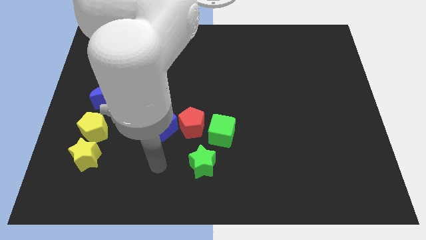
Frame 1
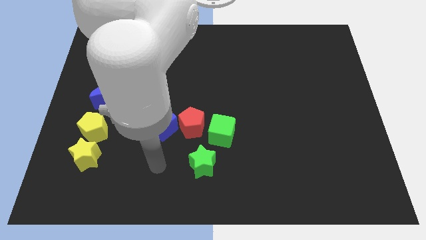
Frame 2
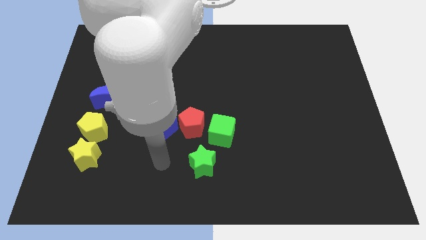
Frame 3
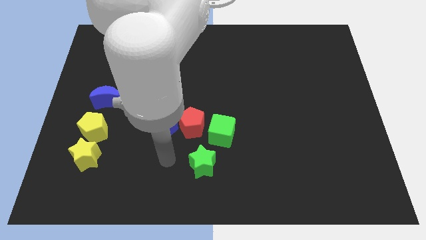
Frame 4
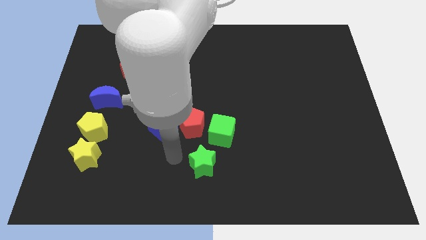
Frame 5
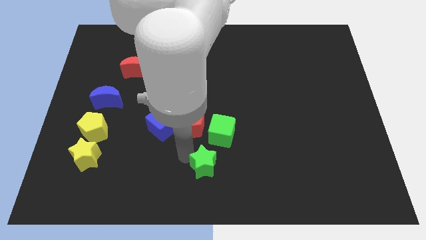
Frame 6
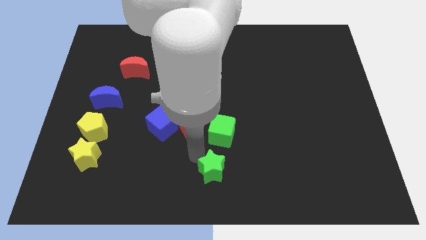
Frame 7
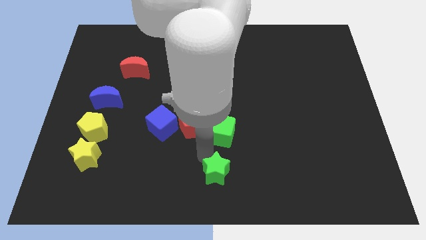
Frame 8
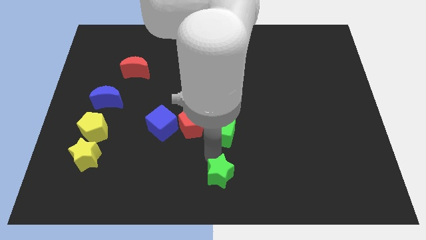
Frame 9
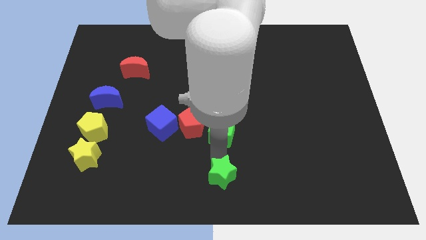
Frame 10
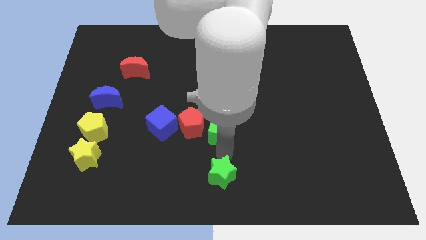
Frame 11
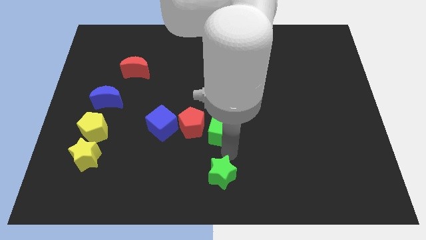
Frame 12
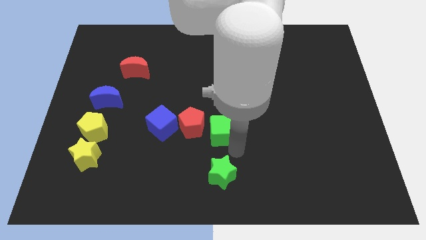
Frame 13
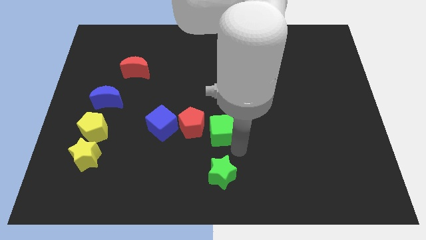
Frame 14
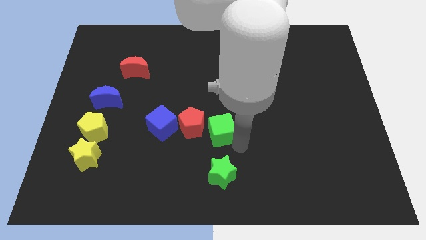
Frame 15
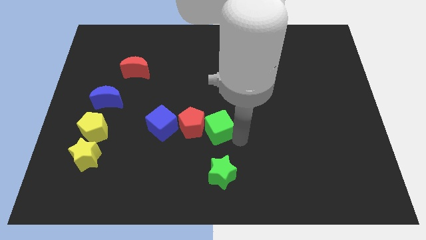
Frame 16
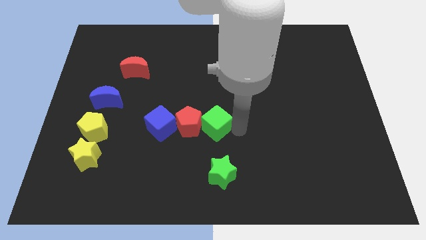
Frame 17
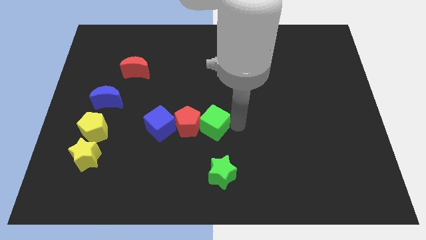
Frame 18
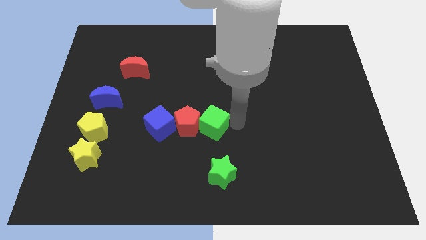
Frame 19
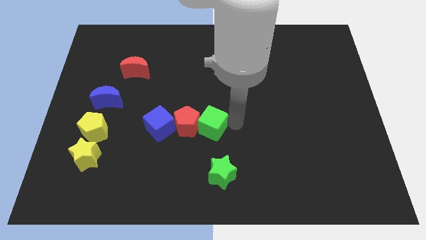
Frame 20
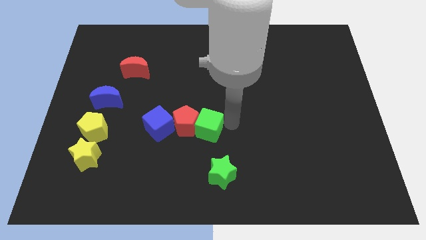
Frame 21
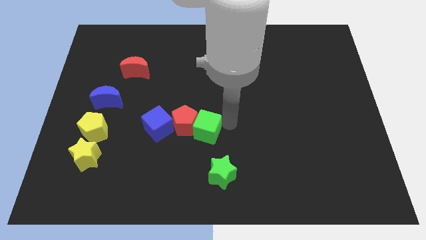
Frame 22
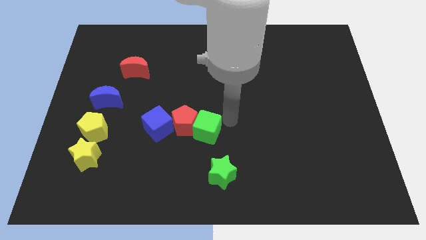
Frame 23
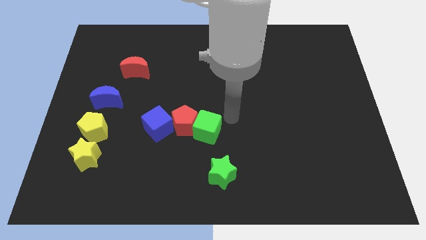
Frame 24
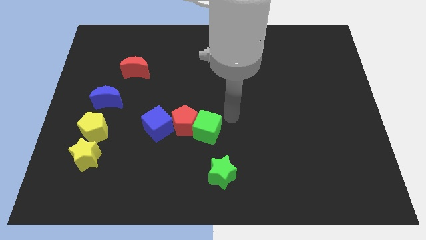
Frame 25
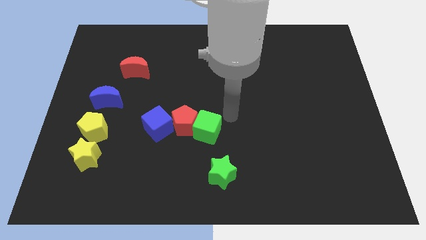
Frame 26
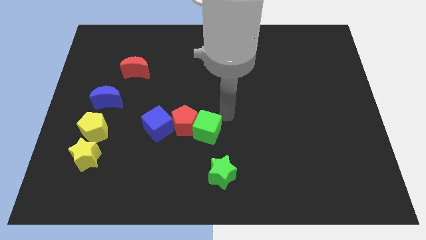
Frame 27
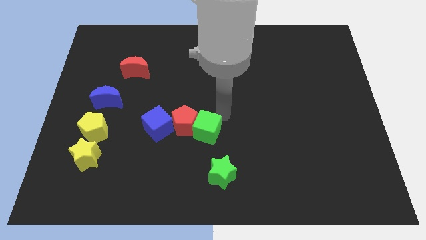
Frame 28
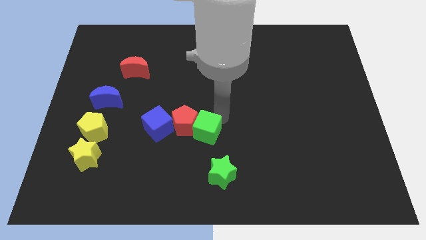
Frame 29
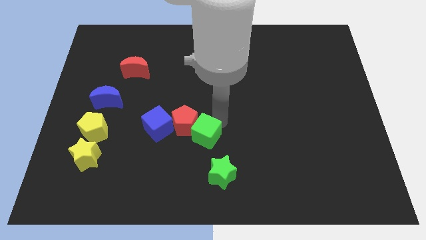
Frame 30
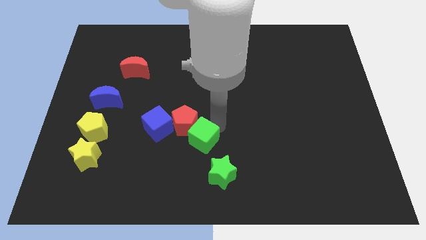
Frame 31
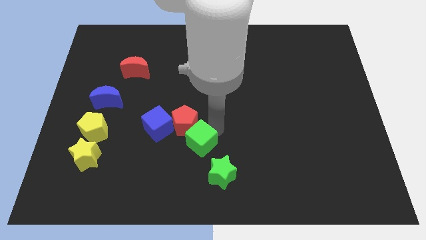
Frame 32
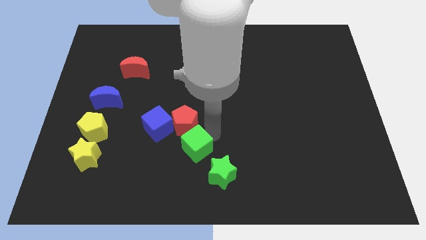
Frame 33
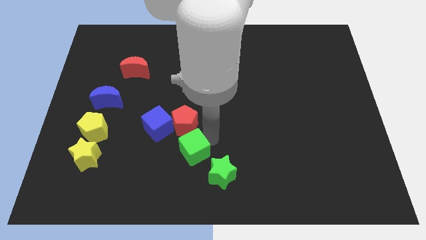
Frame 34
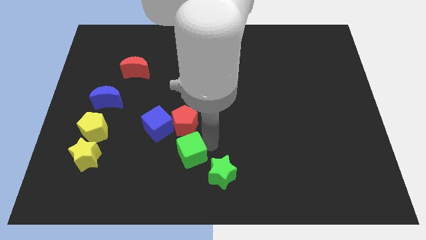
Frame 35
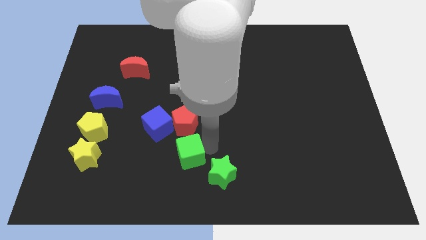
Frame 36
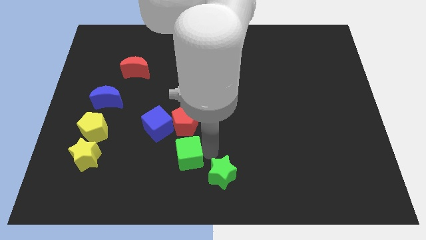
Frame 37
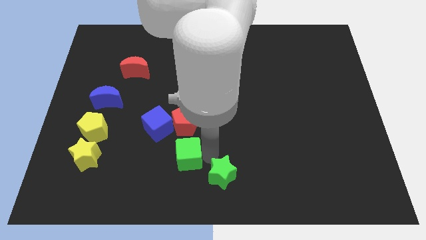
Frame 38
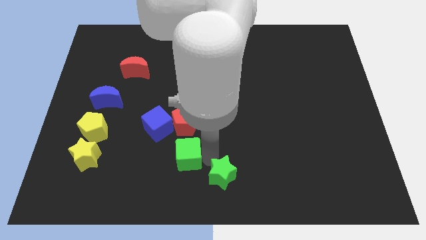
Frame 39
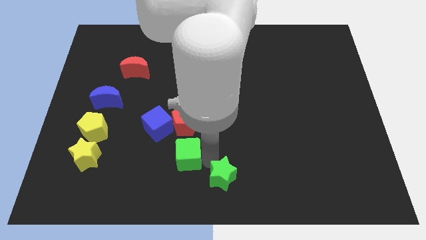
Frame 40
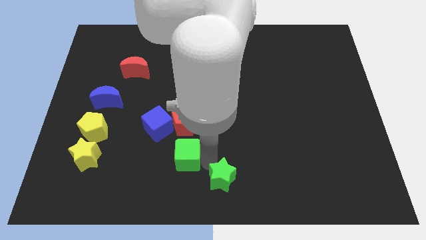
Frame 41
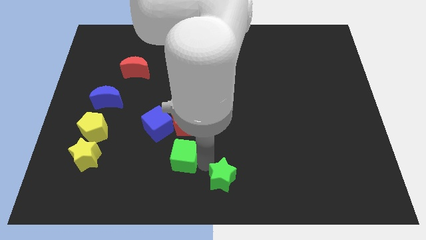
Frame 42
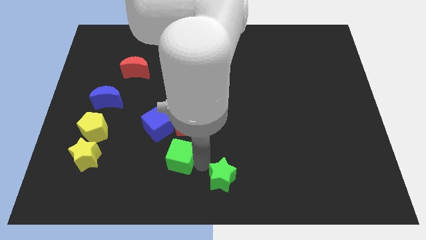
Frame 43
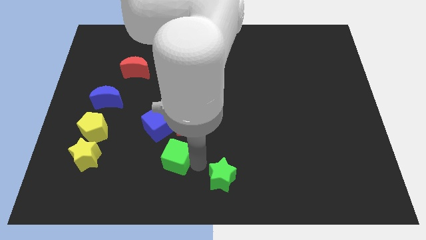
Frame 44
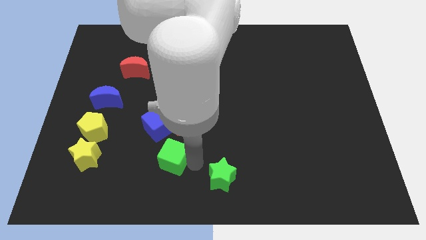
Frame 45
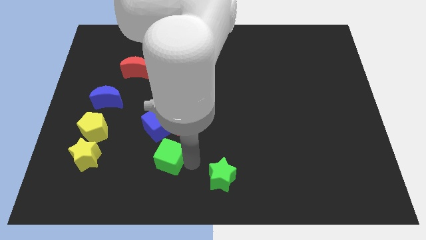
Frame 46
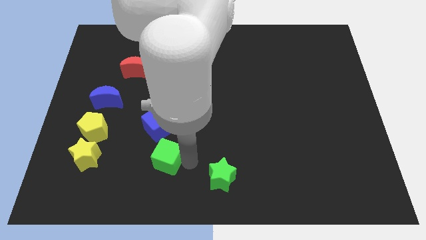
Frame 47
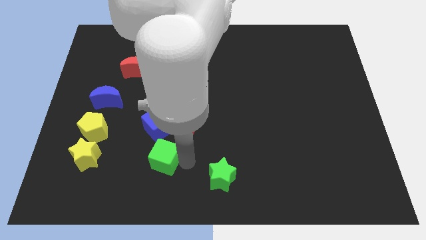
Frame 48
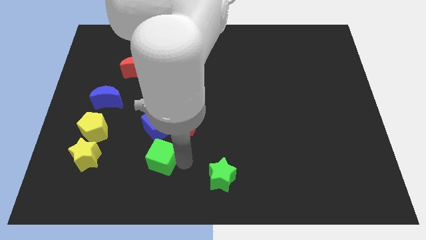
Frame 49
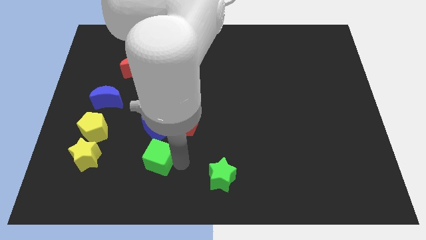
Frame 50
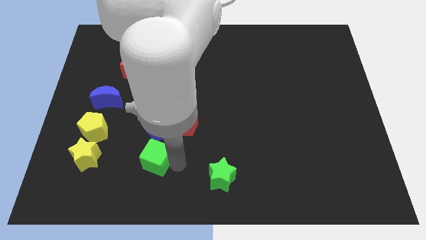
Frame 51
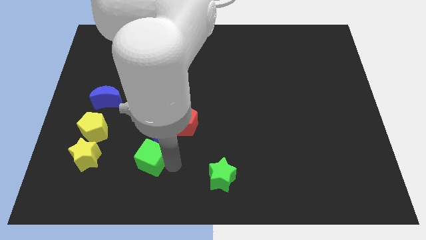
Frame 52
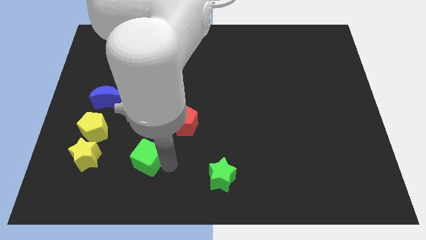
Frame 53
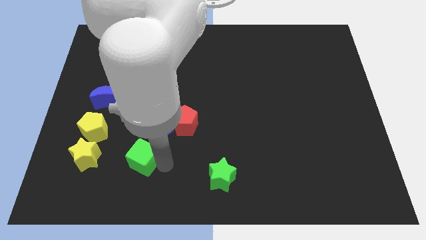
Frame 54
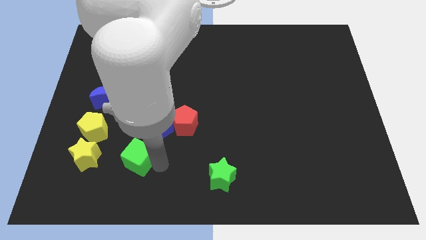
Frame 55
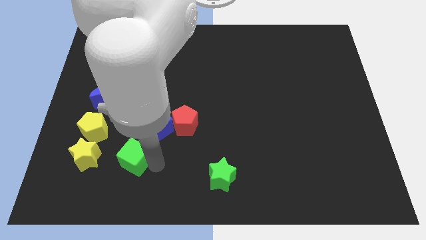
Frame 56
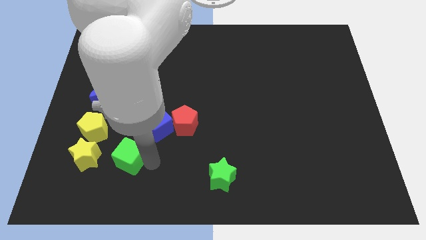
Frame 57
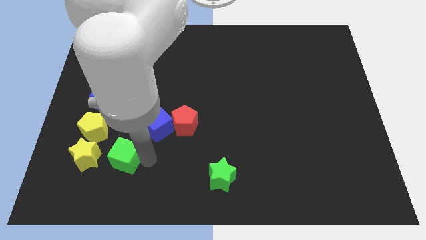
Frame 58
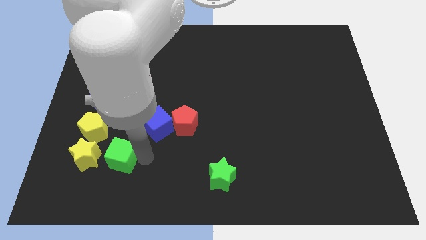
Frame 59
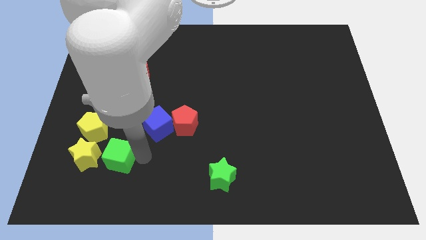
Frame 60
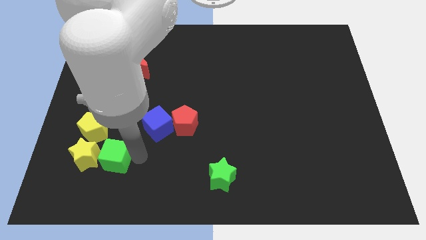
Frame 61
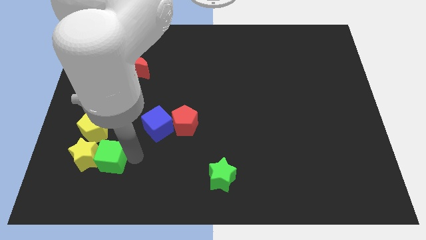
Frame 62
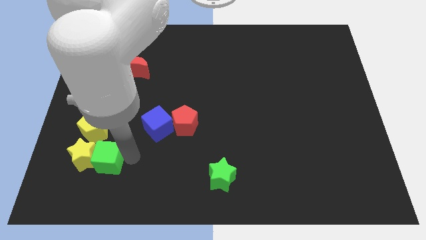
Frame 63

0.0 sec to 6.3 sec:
move the green cube to the yellow star

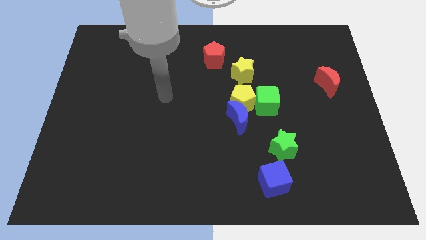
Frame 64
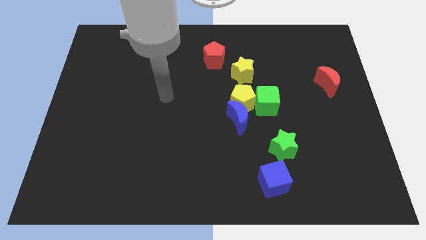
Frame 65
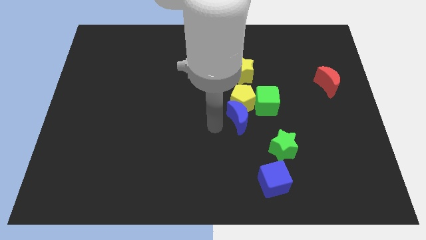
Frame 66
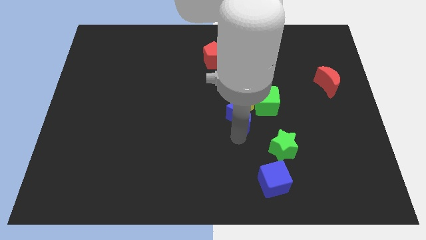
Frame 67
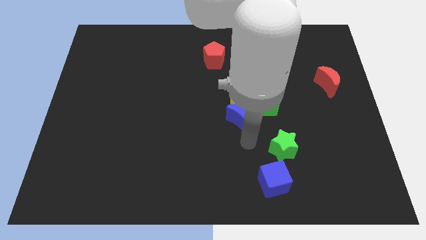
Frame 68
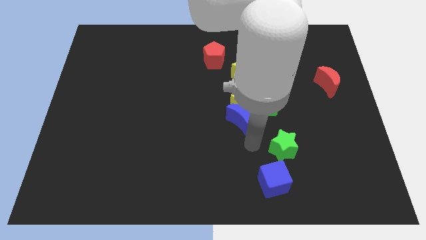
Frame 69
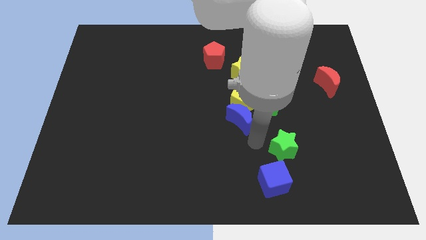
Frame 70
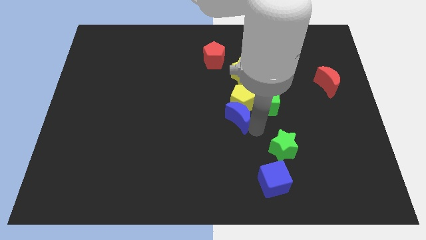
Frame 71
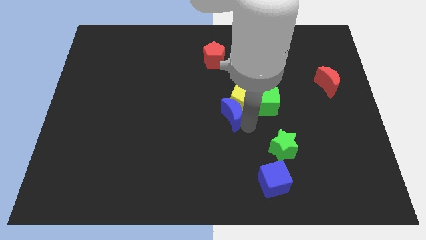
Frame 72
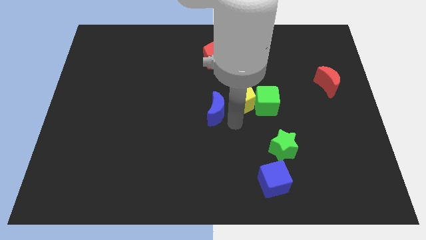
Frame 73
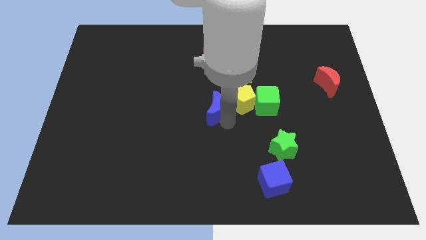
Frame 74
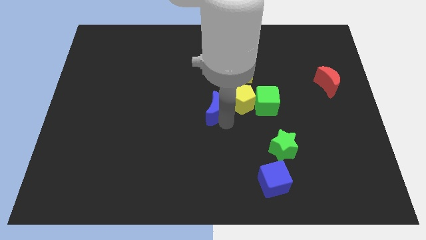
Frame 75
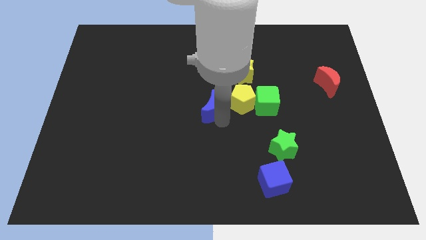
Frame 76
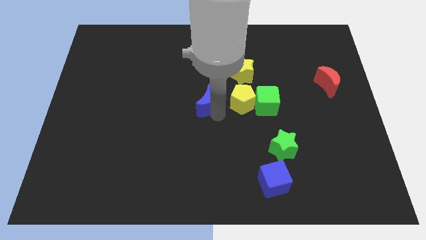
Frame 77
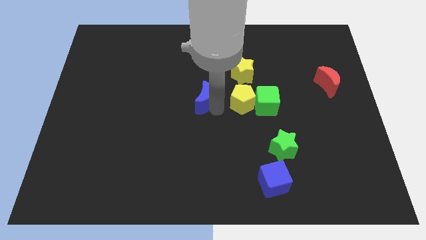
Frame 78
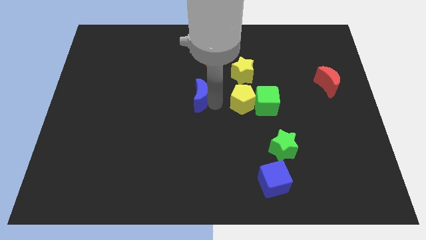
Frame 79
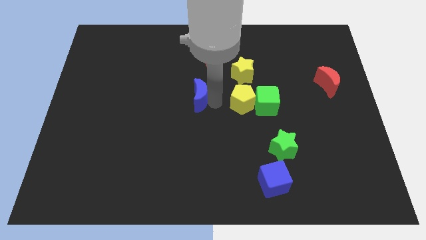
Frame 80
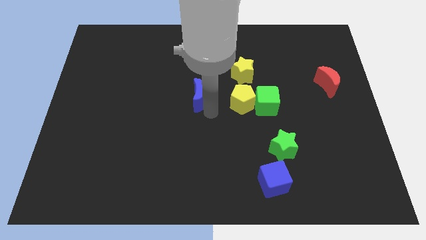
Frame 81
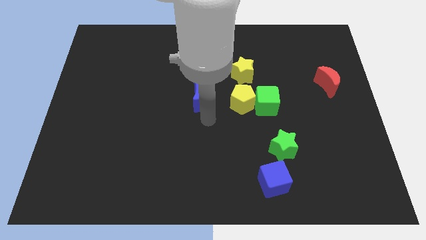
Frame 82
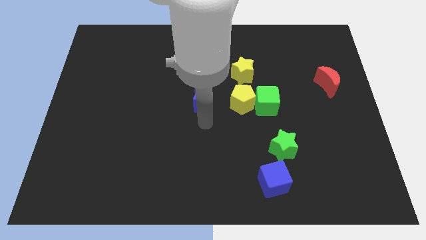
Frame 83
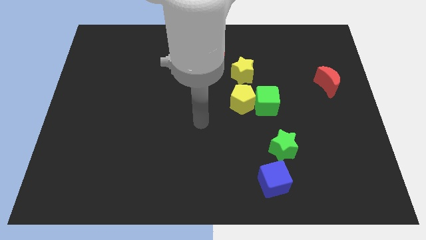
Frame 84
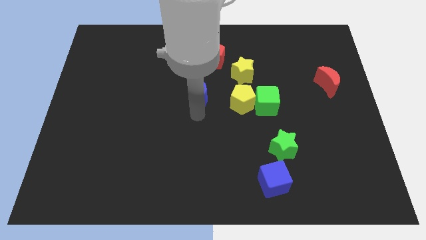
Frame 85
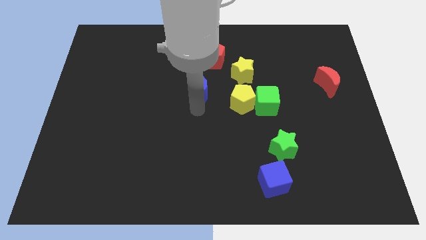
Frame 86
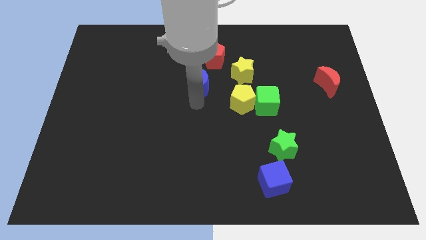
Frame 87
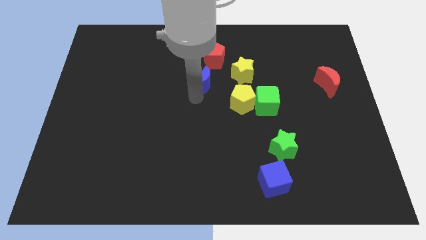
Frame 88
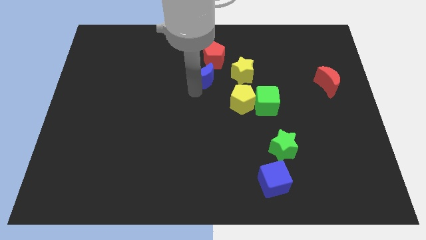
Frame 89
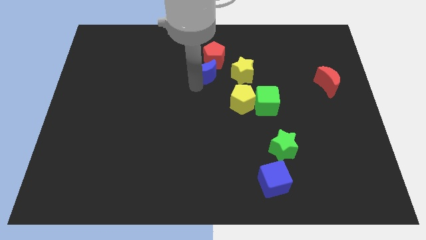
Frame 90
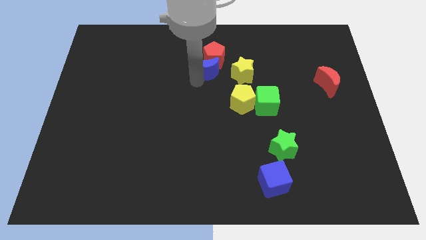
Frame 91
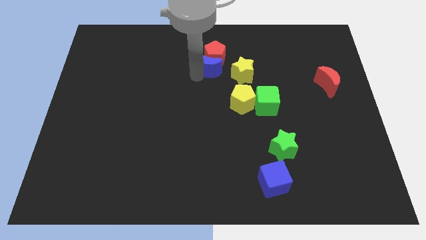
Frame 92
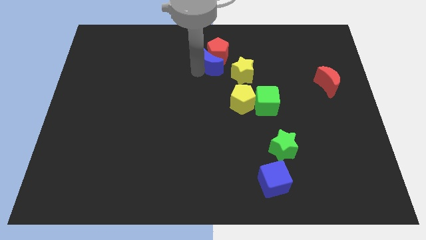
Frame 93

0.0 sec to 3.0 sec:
slide the blue moon next to the red pentagon
